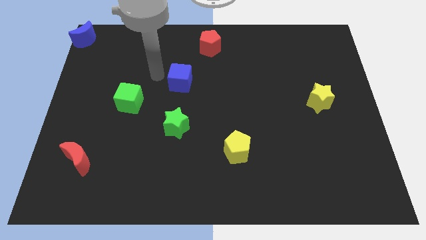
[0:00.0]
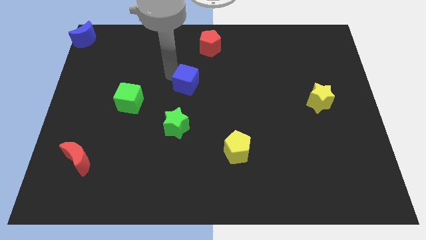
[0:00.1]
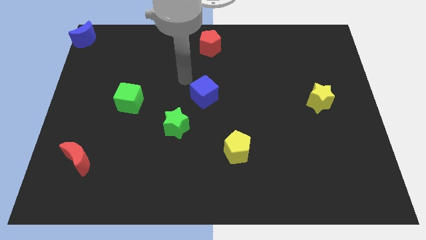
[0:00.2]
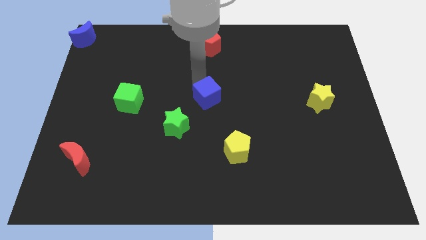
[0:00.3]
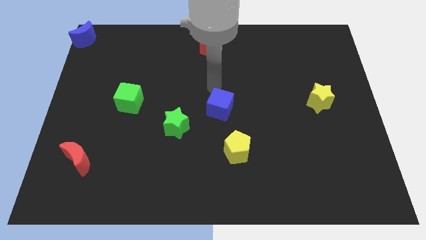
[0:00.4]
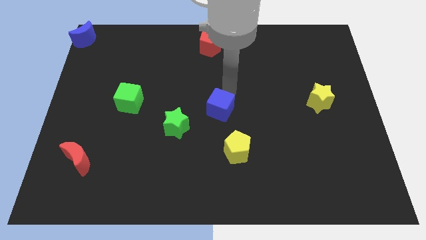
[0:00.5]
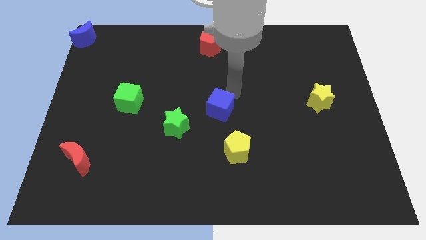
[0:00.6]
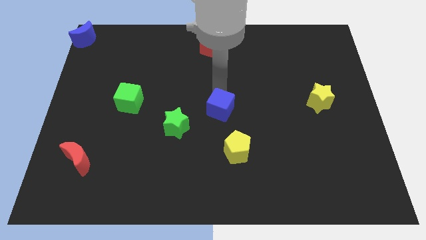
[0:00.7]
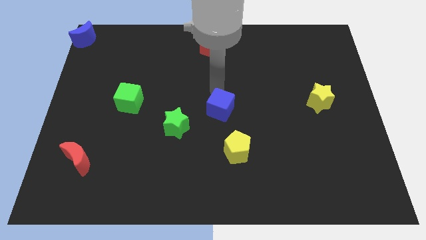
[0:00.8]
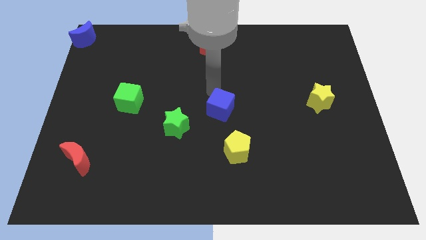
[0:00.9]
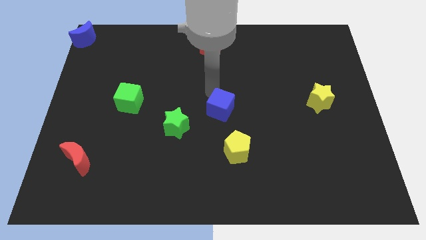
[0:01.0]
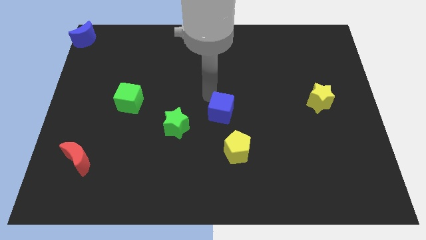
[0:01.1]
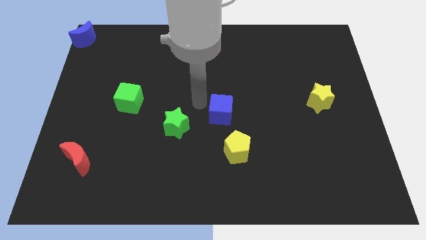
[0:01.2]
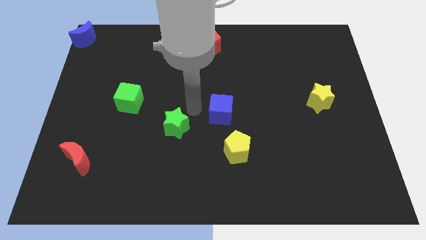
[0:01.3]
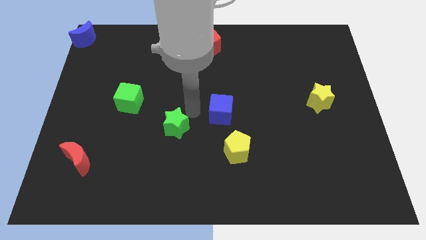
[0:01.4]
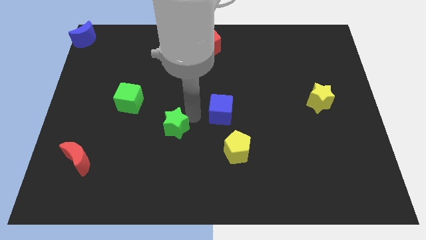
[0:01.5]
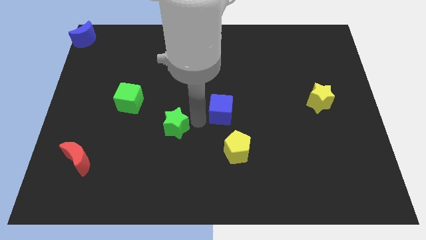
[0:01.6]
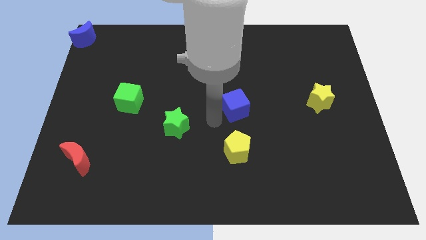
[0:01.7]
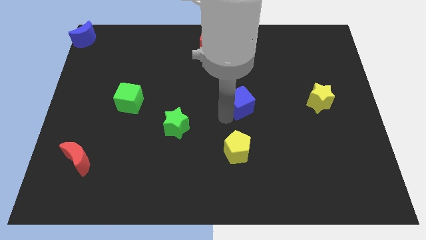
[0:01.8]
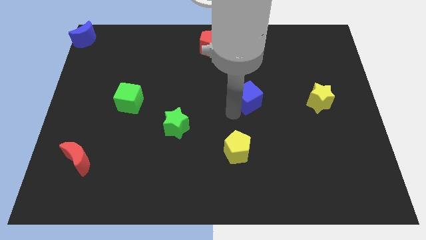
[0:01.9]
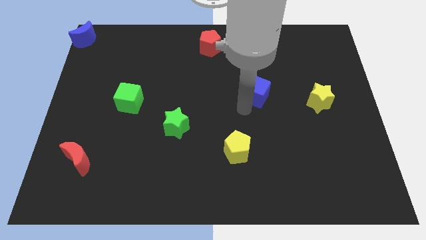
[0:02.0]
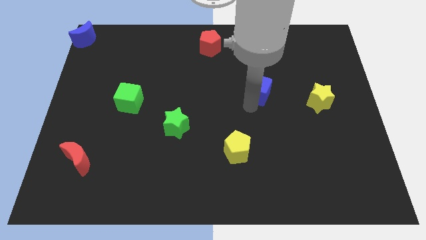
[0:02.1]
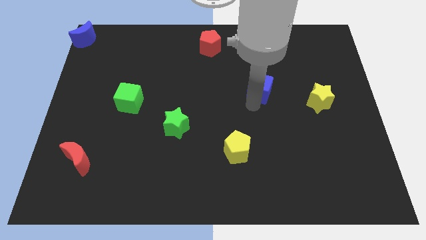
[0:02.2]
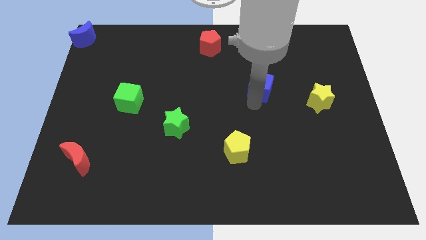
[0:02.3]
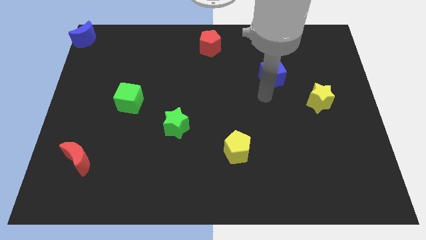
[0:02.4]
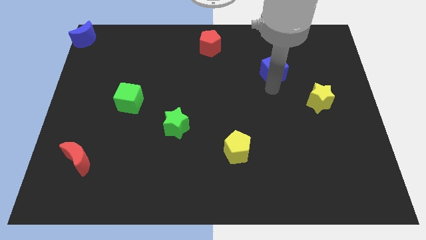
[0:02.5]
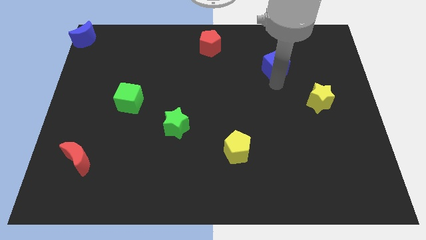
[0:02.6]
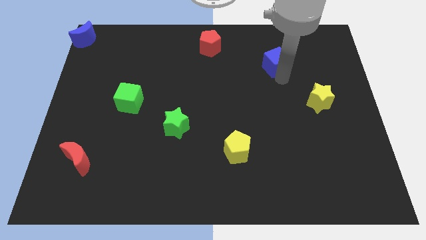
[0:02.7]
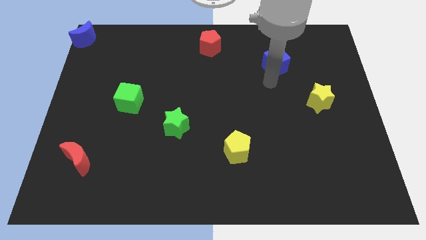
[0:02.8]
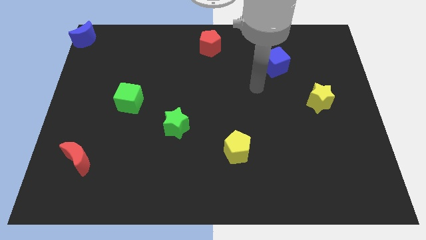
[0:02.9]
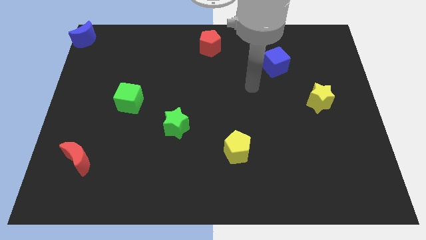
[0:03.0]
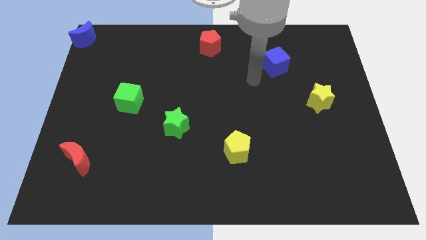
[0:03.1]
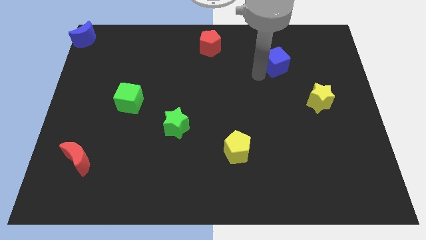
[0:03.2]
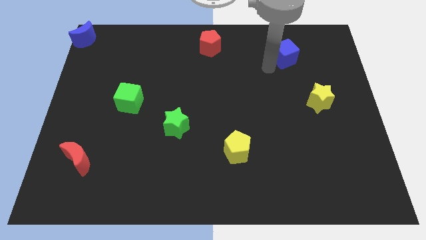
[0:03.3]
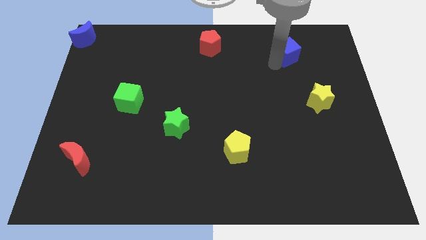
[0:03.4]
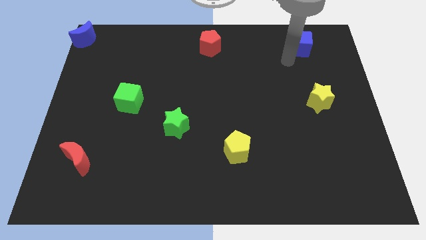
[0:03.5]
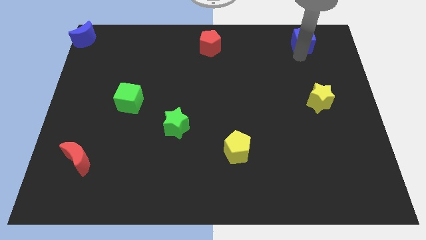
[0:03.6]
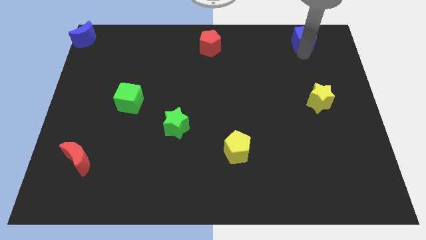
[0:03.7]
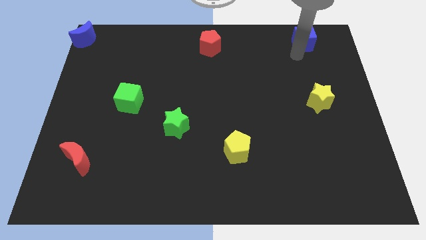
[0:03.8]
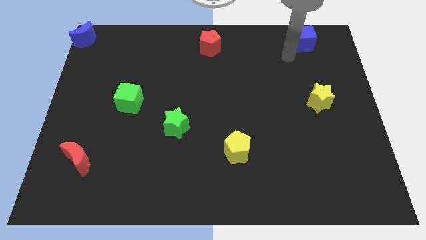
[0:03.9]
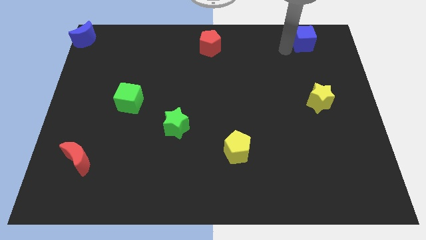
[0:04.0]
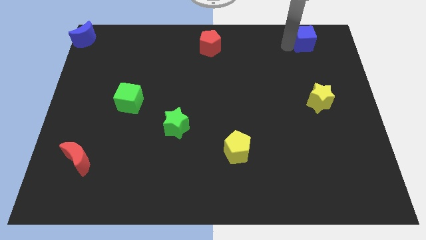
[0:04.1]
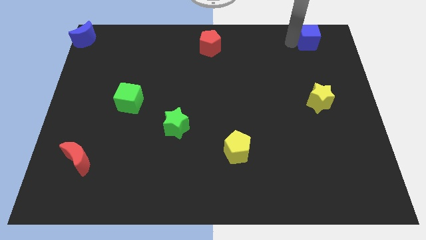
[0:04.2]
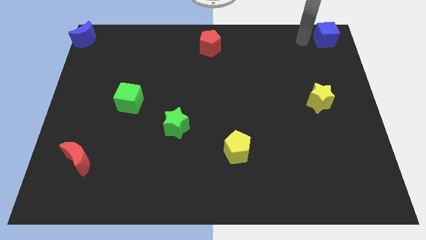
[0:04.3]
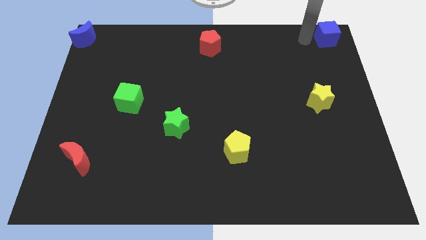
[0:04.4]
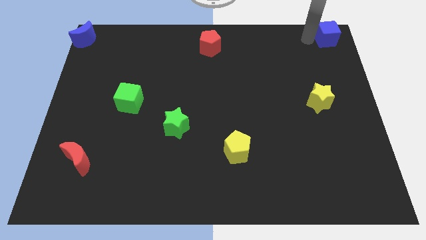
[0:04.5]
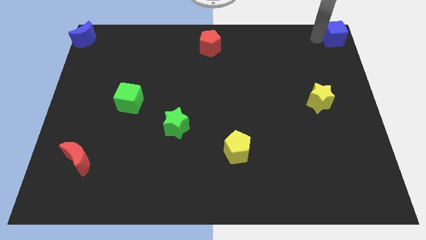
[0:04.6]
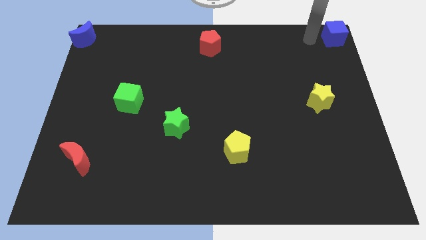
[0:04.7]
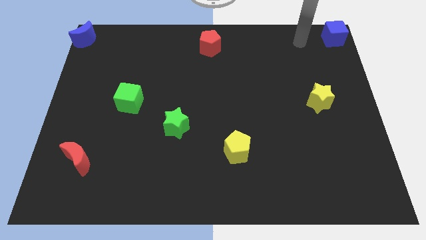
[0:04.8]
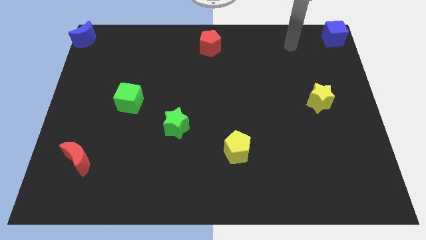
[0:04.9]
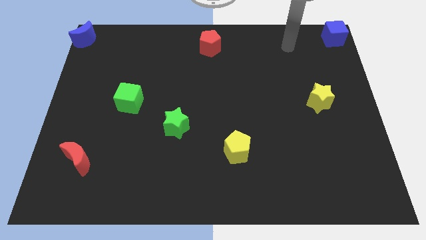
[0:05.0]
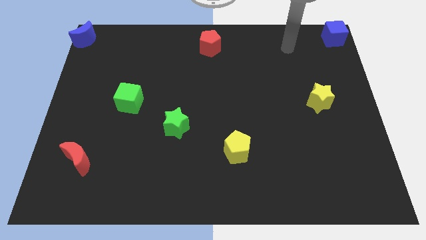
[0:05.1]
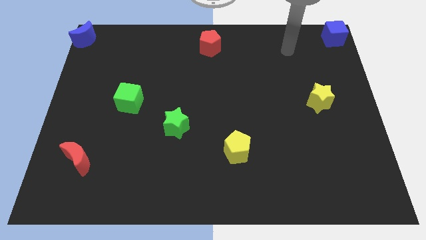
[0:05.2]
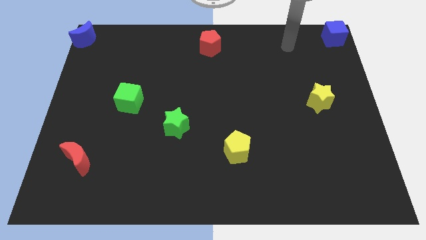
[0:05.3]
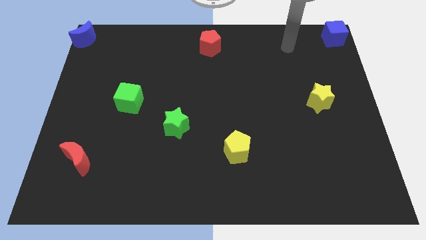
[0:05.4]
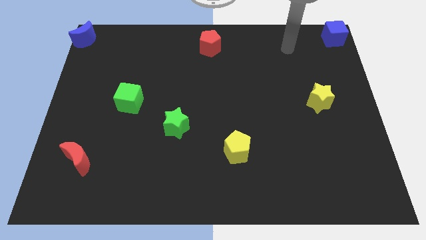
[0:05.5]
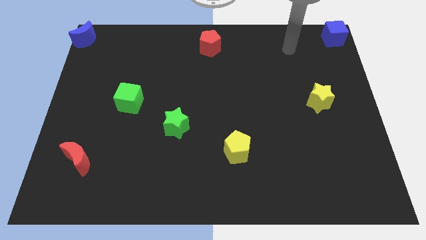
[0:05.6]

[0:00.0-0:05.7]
push the blue cube to the top right corner of the board

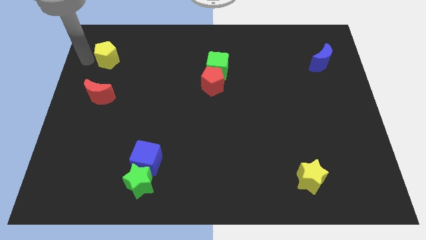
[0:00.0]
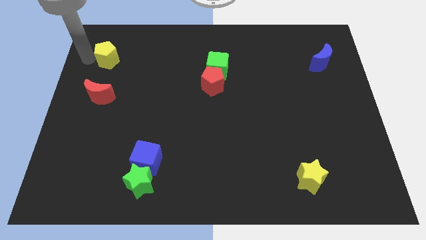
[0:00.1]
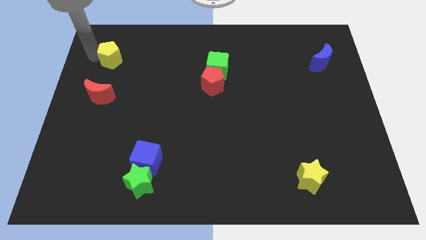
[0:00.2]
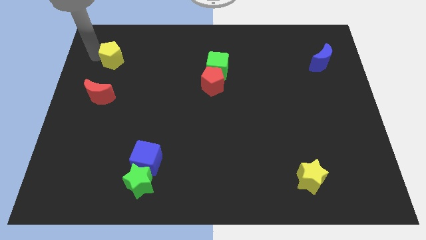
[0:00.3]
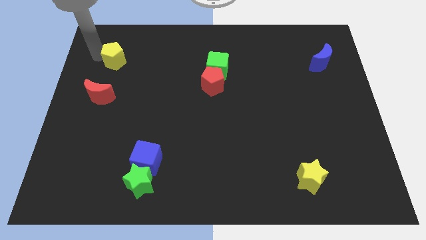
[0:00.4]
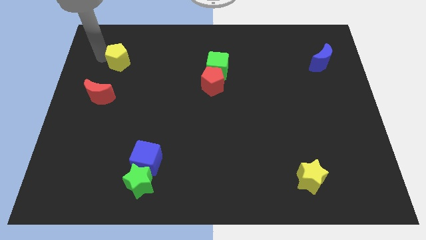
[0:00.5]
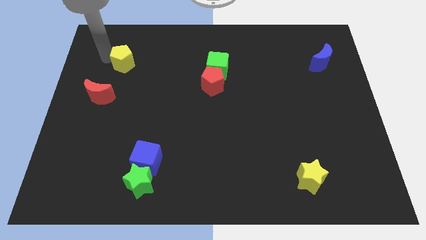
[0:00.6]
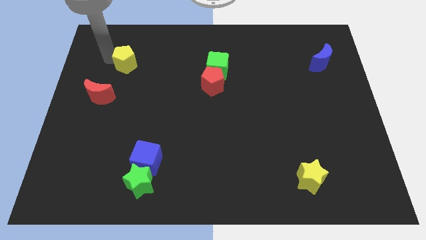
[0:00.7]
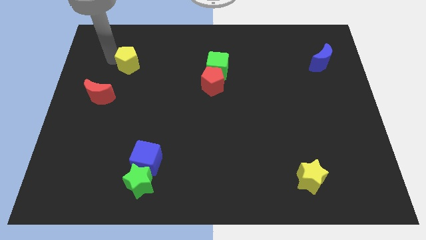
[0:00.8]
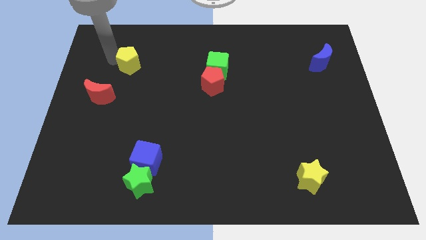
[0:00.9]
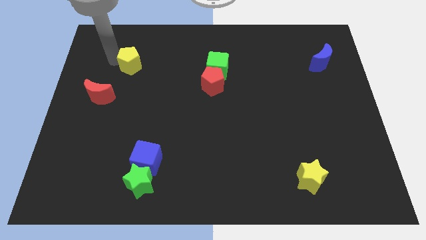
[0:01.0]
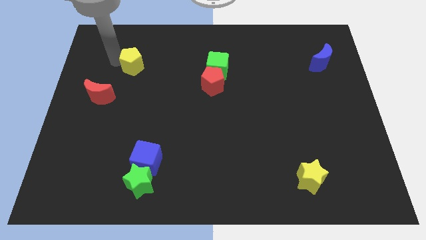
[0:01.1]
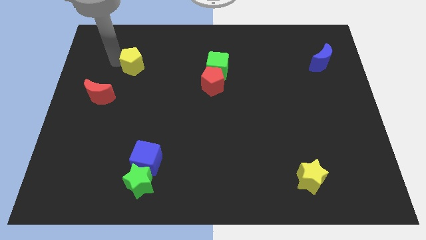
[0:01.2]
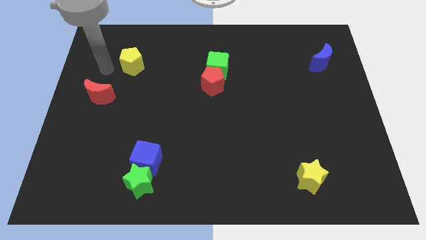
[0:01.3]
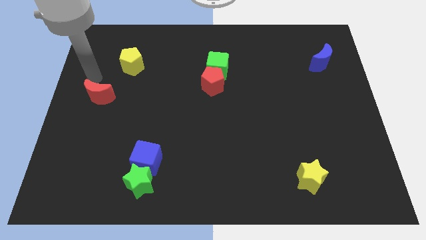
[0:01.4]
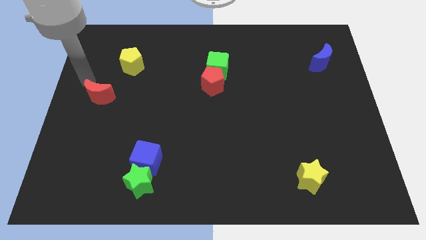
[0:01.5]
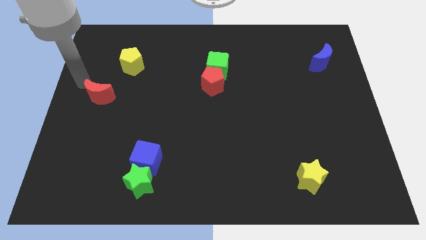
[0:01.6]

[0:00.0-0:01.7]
push the yellow pentagon slightly to the right

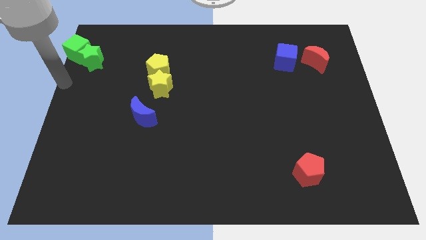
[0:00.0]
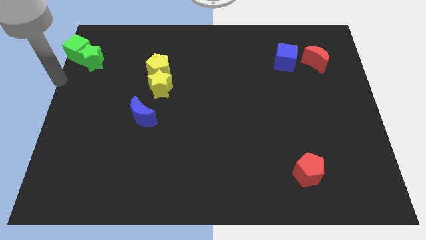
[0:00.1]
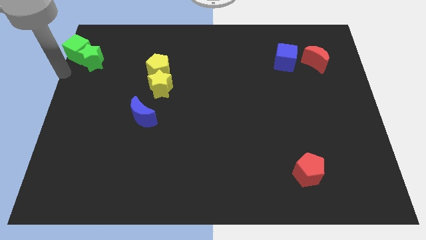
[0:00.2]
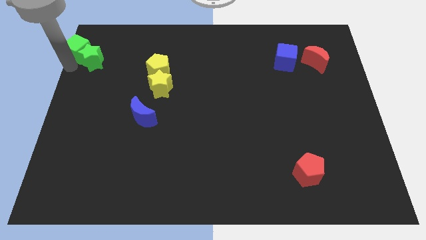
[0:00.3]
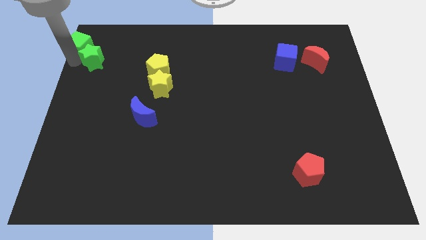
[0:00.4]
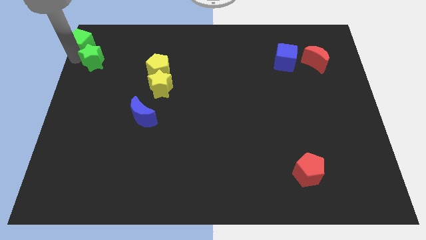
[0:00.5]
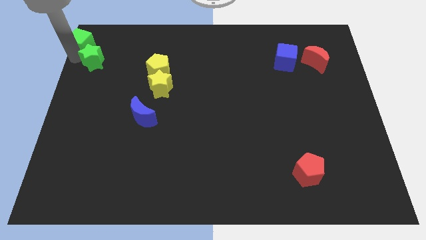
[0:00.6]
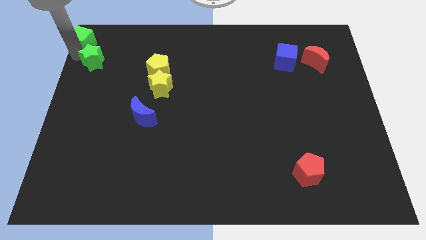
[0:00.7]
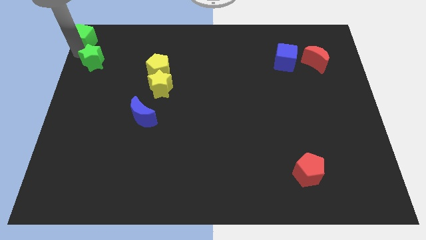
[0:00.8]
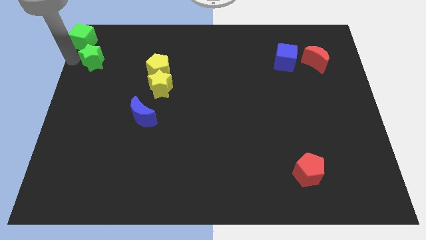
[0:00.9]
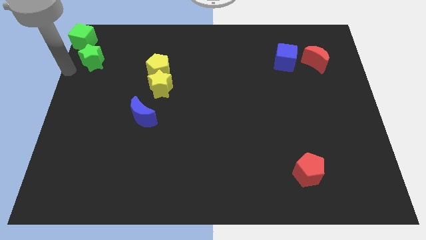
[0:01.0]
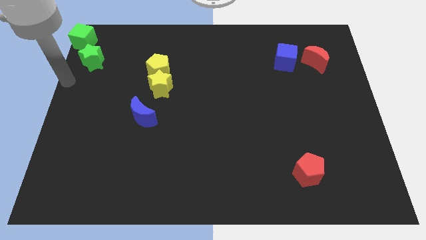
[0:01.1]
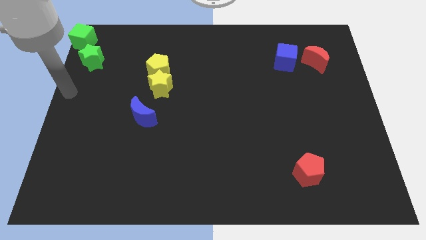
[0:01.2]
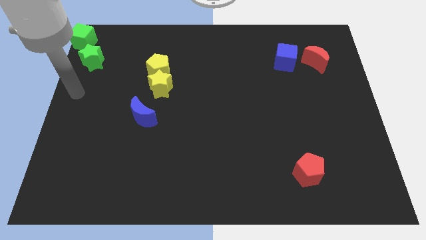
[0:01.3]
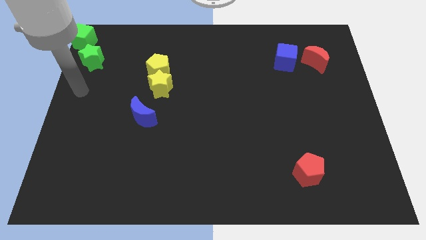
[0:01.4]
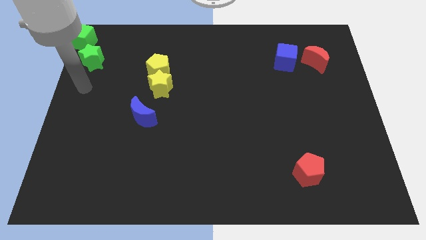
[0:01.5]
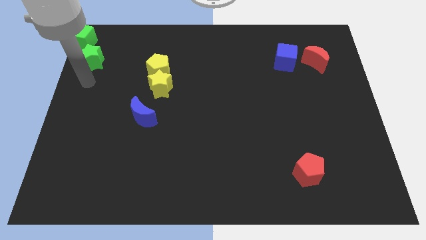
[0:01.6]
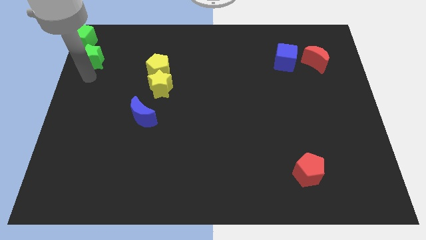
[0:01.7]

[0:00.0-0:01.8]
push the green star away from the green cube
